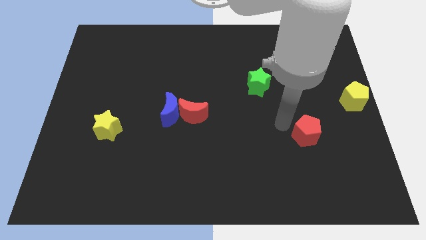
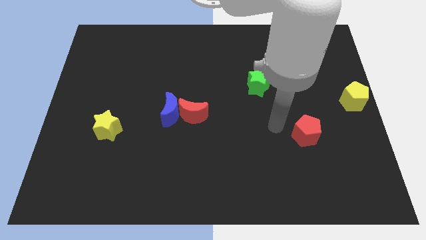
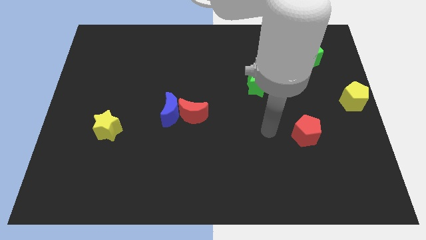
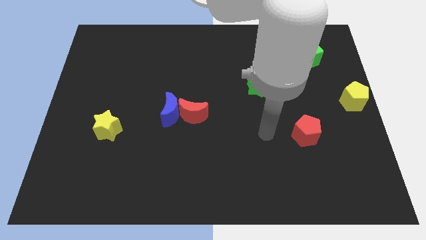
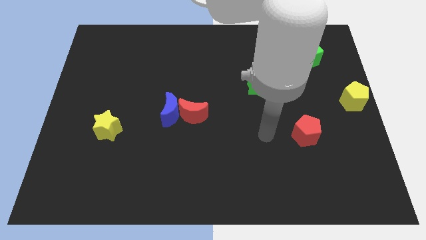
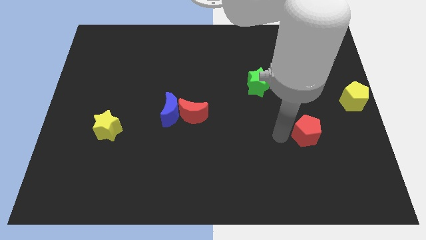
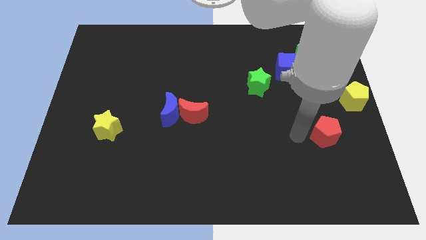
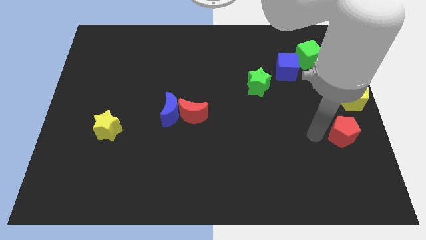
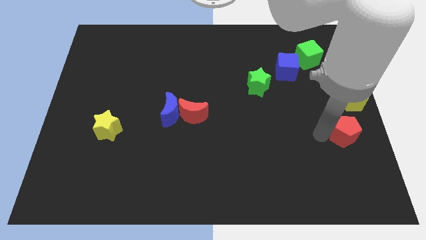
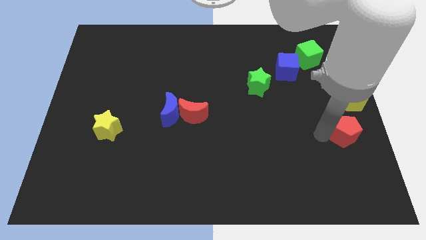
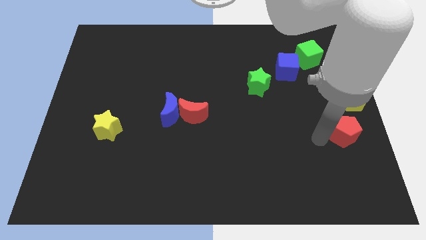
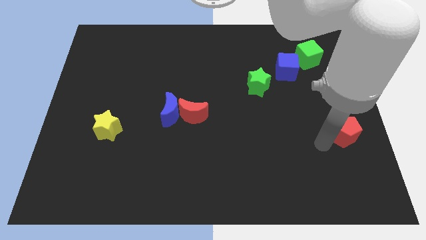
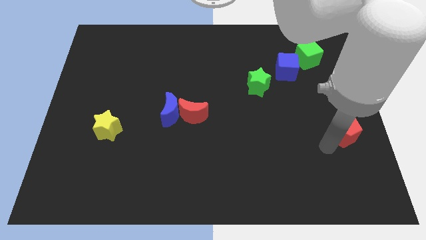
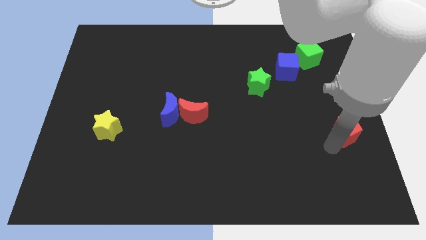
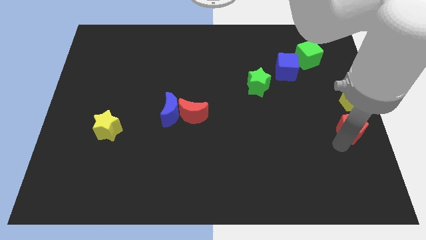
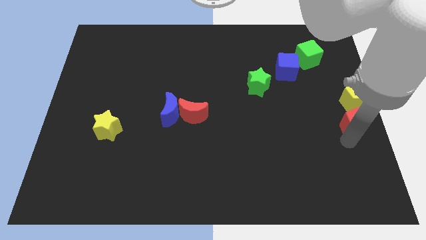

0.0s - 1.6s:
place the red pentagon below the yellow pentagon

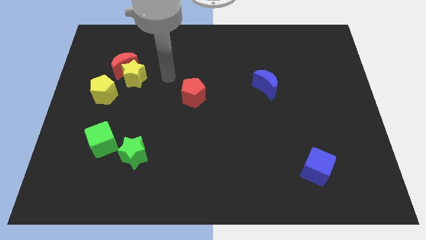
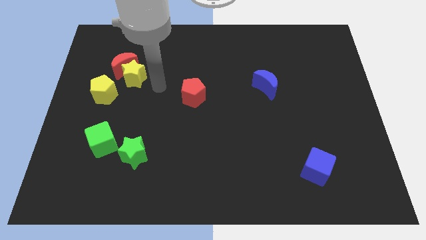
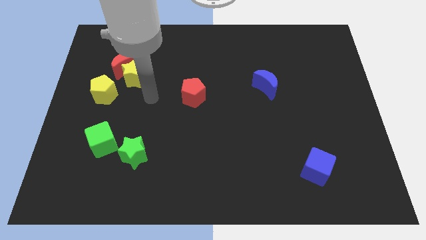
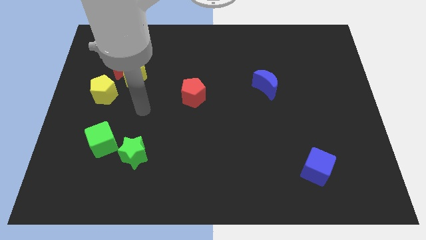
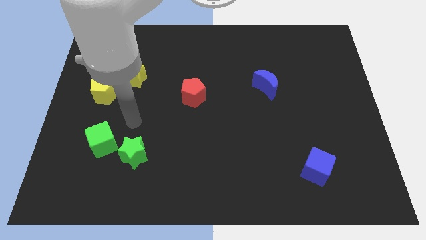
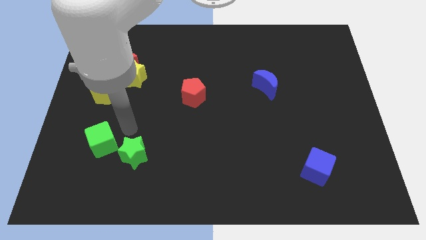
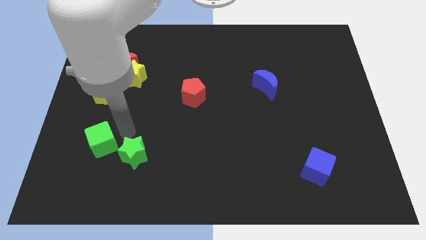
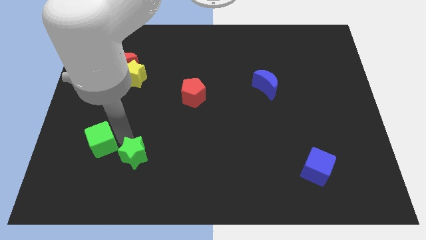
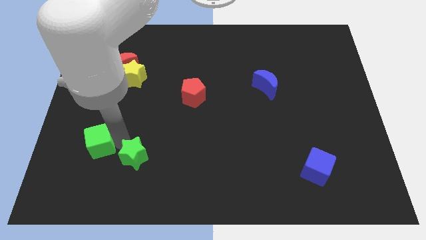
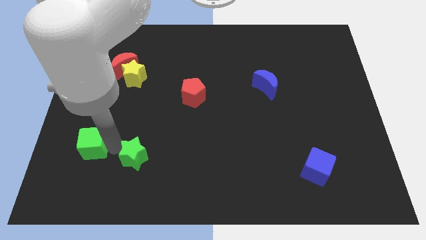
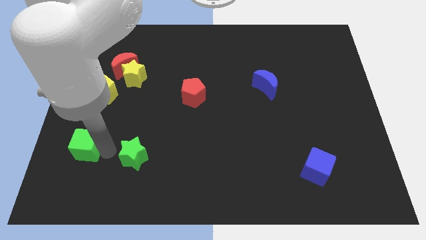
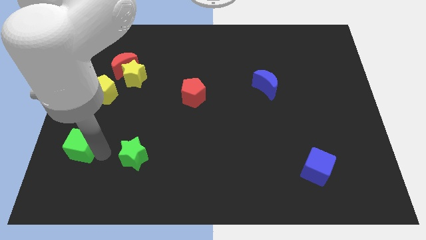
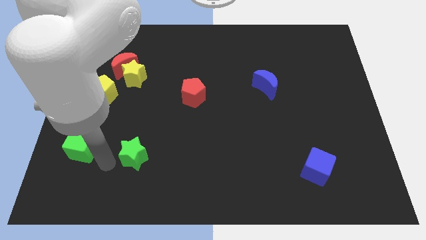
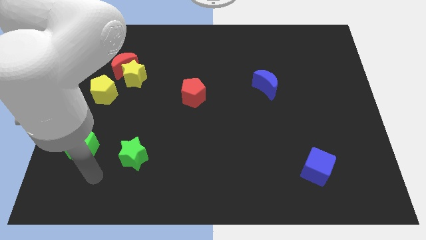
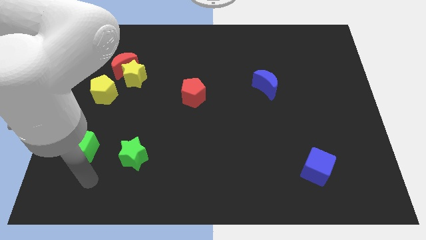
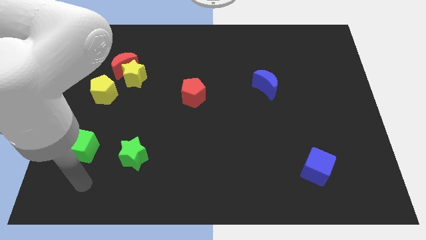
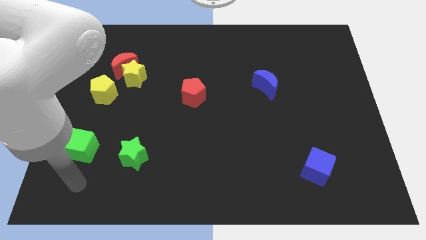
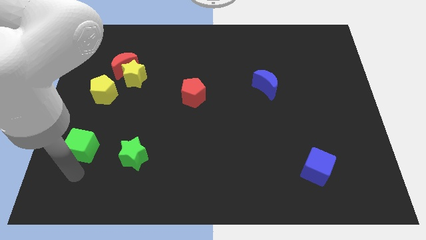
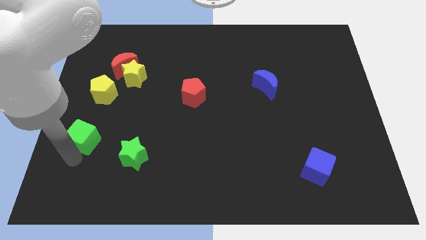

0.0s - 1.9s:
separate the green cube from the green star

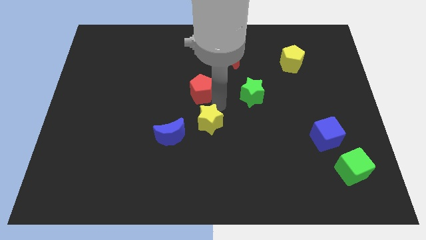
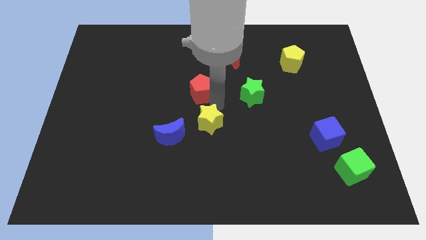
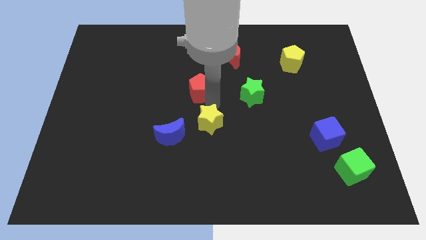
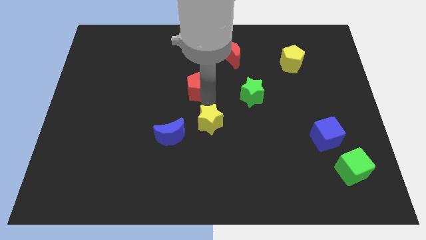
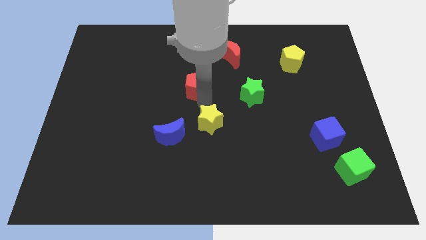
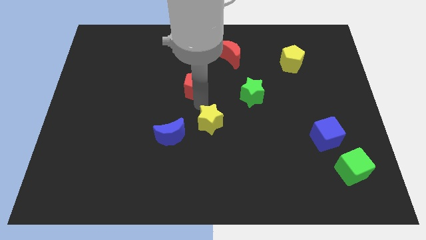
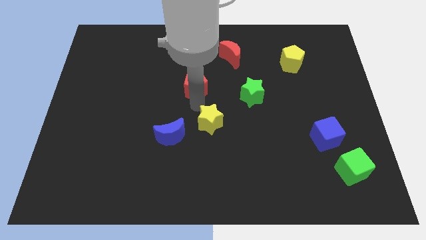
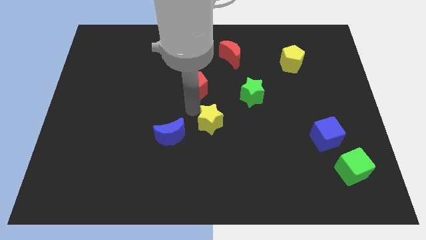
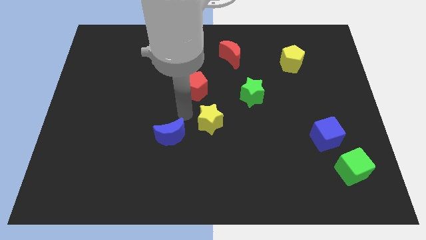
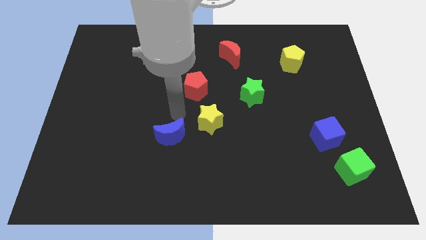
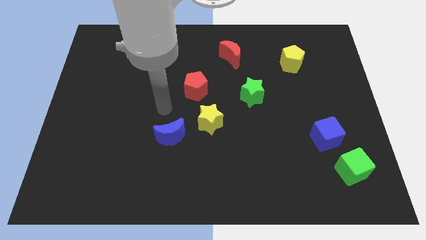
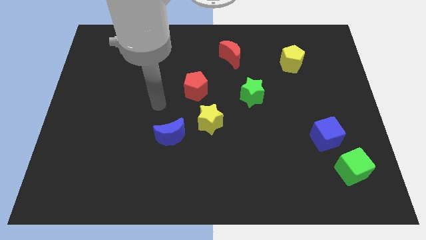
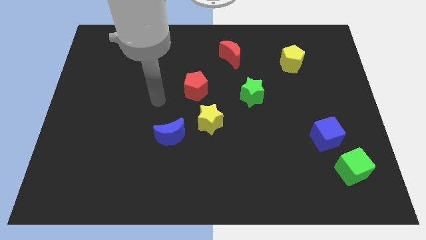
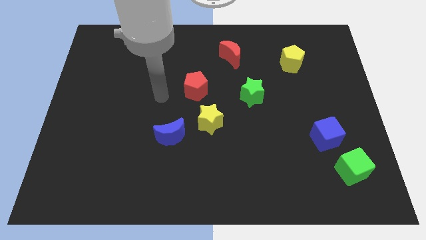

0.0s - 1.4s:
push the red pentagon slightly to the top side of the board

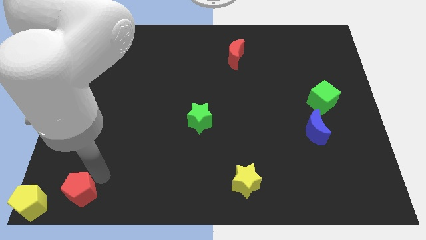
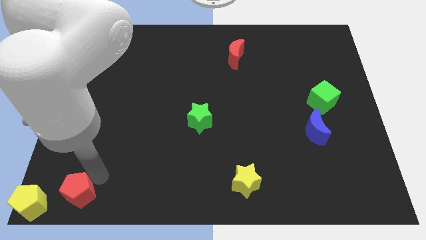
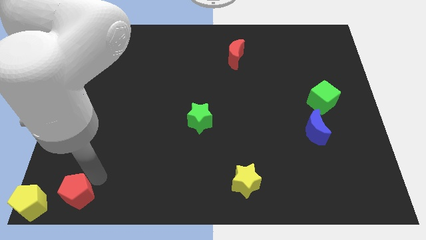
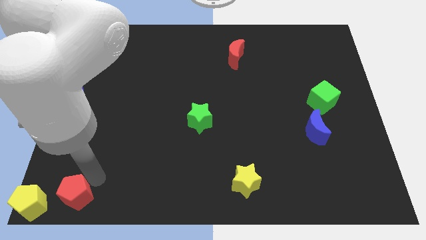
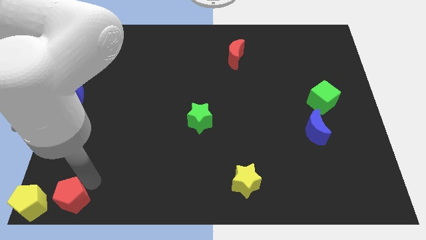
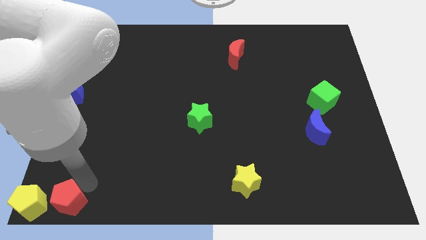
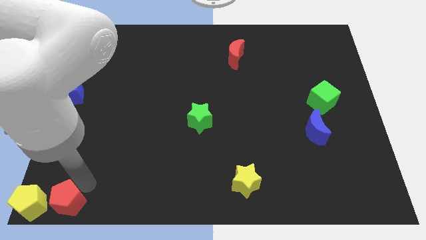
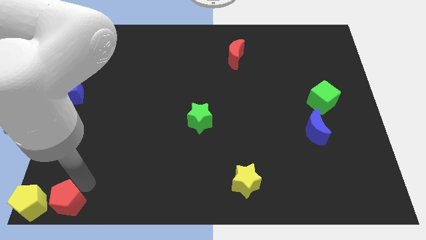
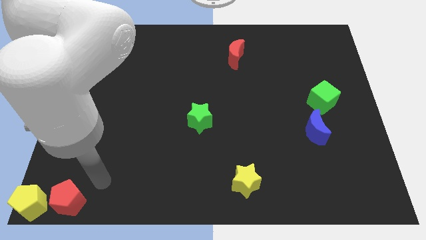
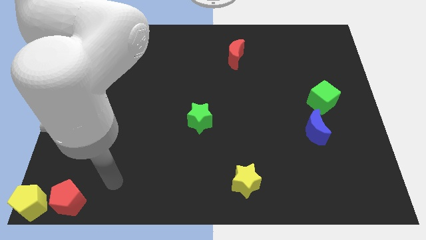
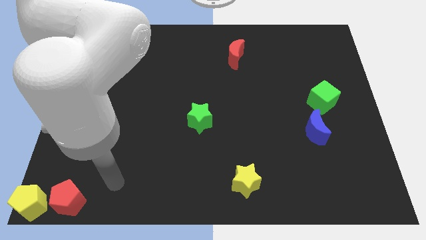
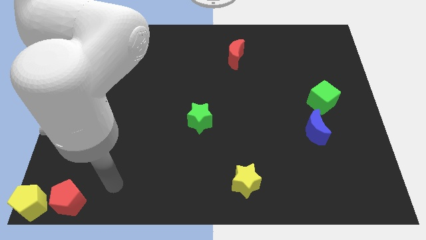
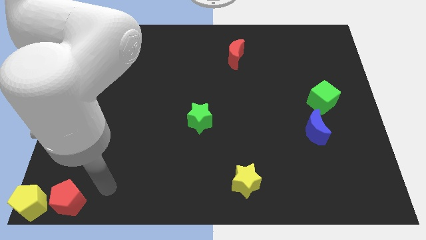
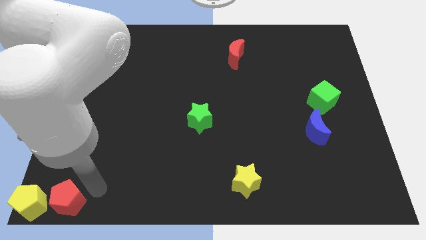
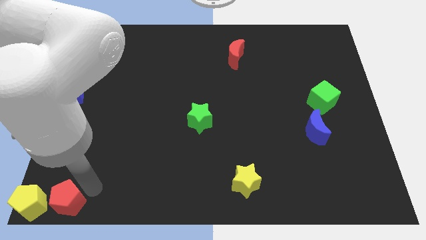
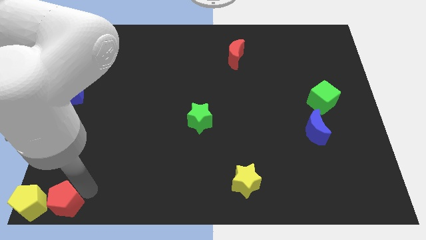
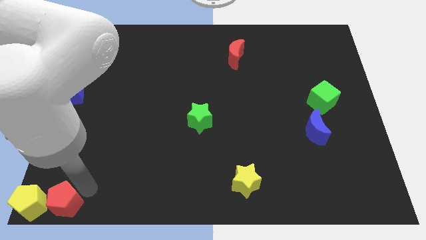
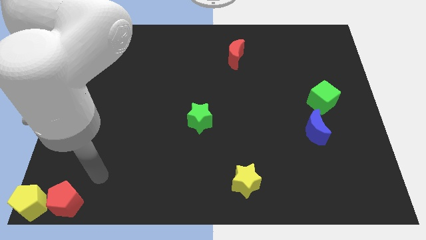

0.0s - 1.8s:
place the red pentagon towards the right to the yellow pentagon

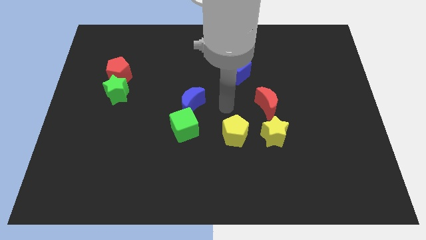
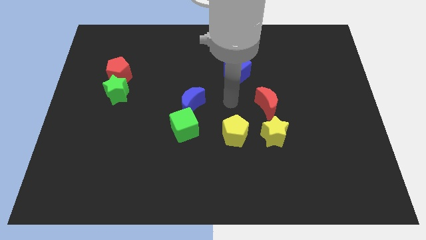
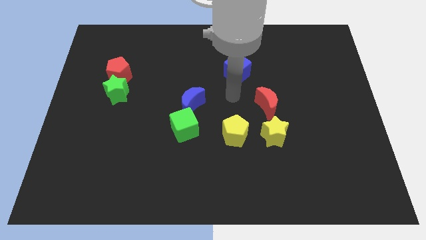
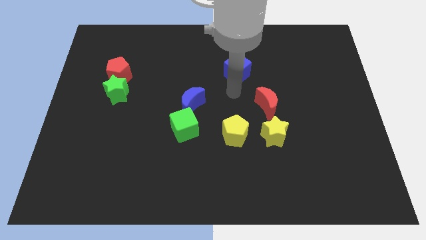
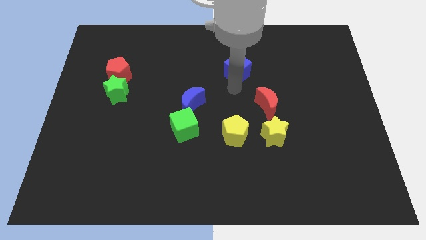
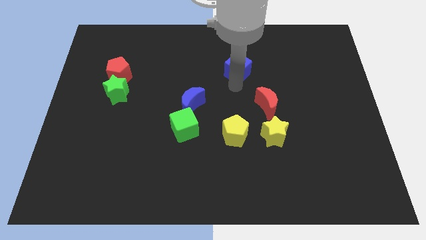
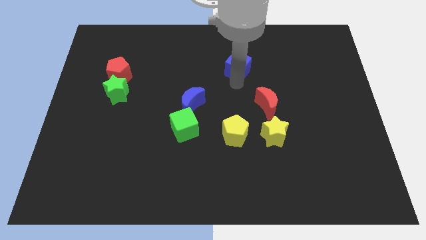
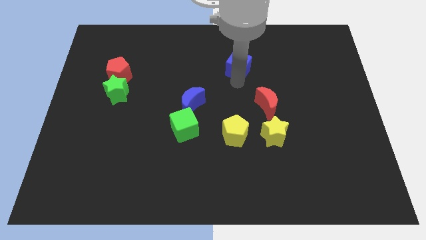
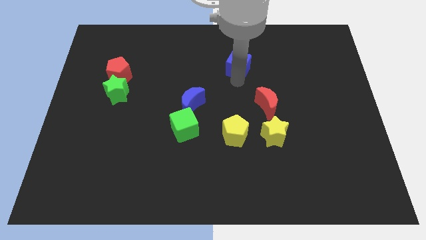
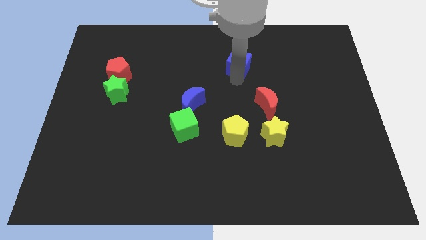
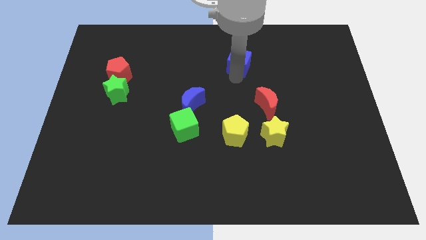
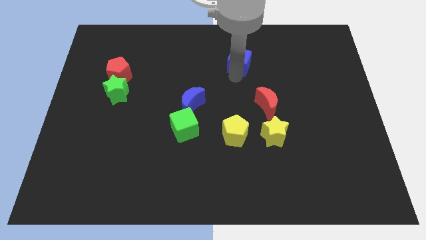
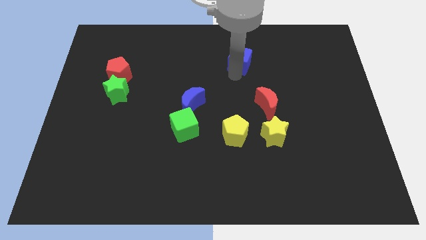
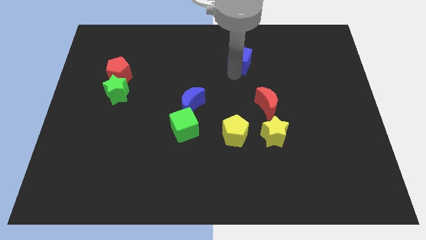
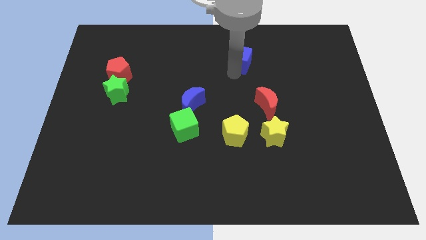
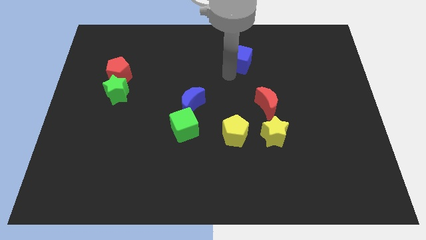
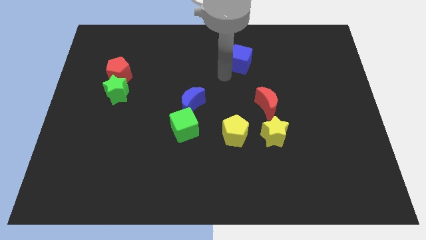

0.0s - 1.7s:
move the blue cube to the top of the board

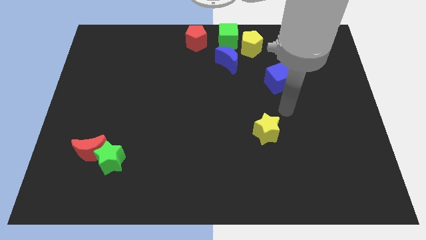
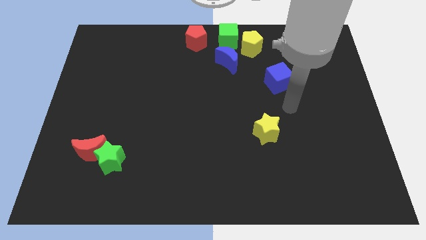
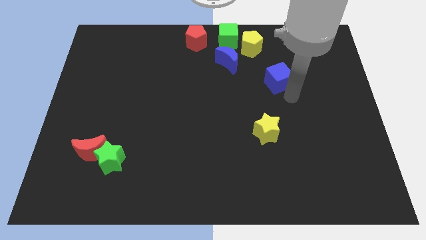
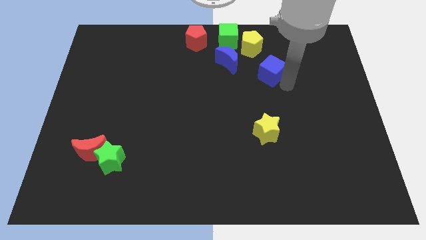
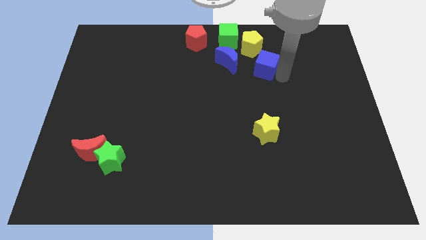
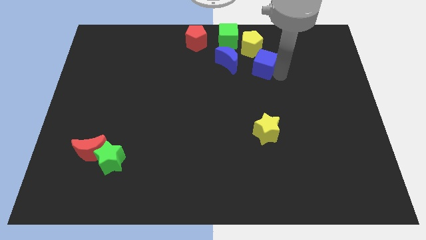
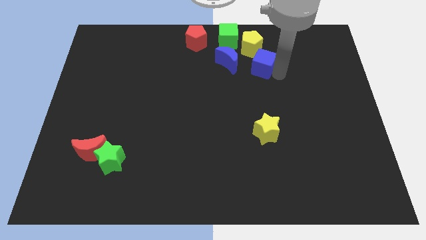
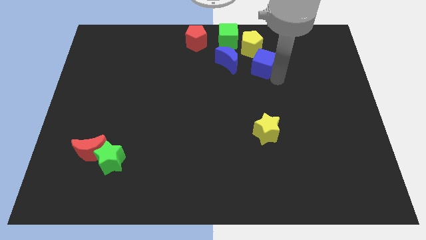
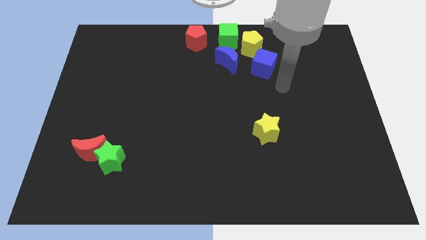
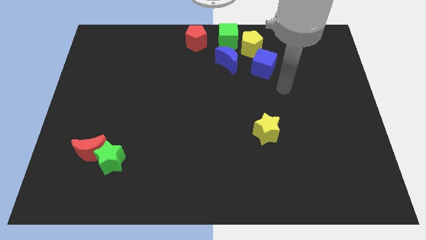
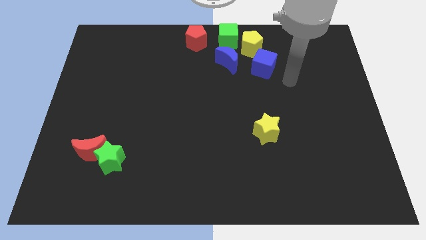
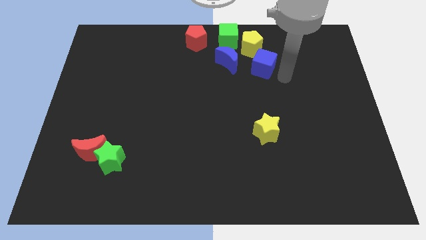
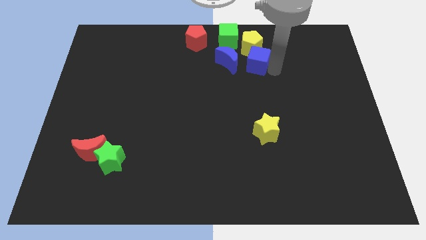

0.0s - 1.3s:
push the blue cube right to the blue moon
